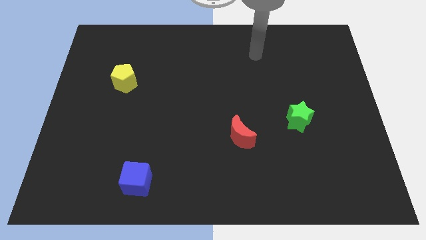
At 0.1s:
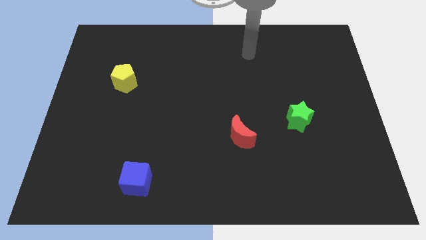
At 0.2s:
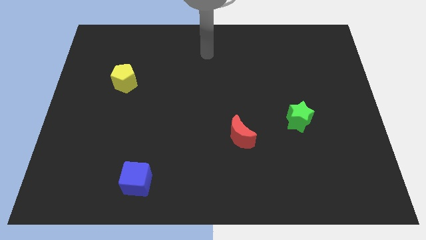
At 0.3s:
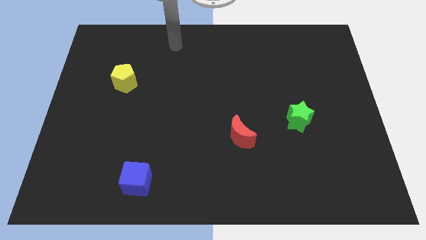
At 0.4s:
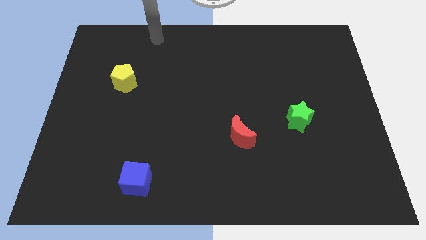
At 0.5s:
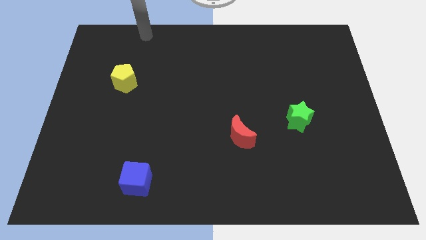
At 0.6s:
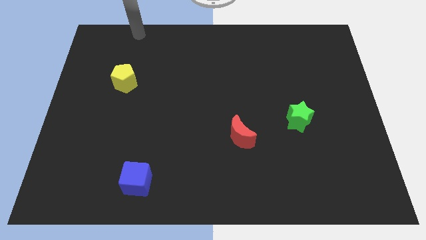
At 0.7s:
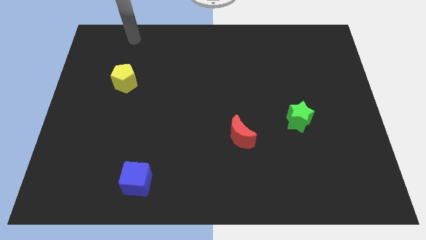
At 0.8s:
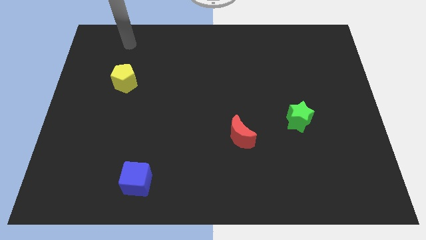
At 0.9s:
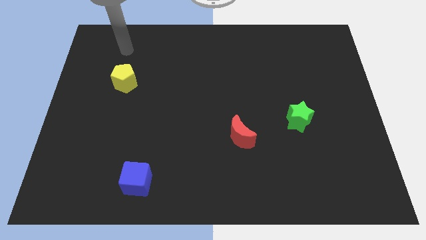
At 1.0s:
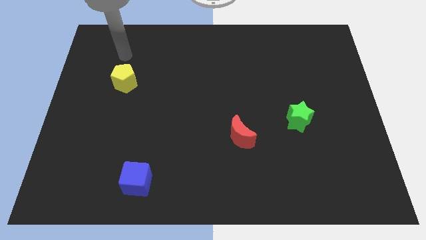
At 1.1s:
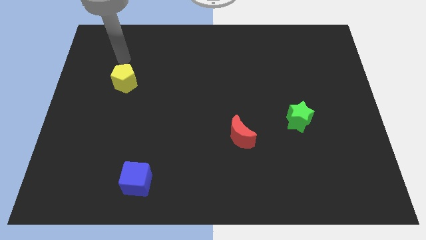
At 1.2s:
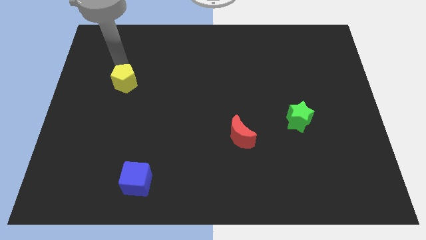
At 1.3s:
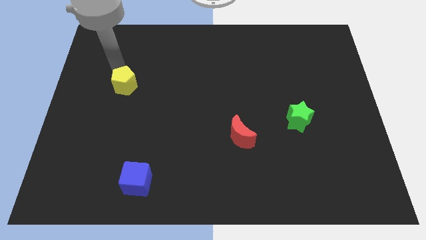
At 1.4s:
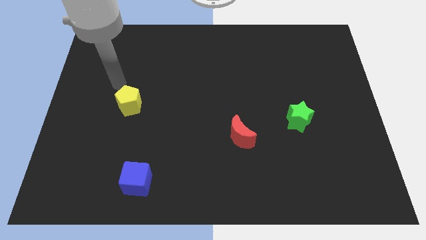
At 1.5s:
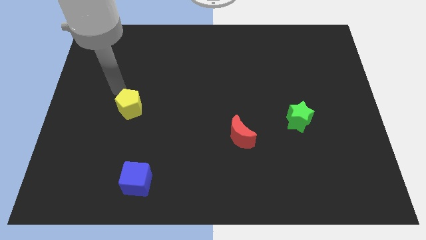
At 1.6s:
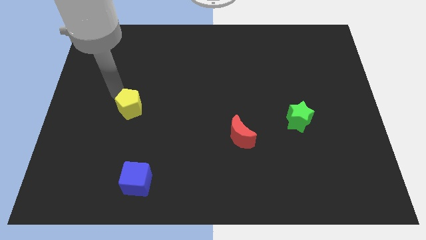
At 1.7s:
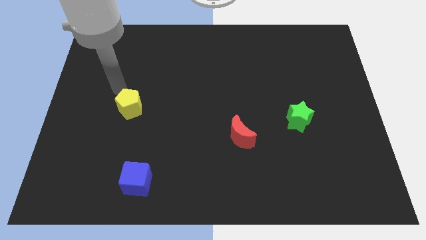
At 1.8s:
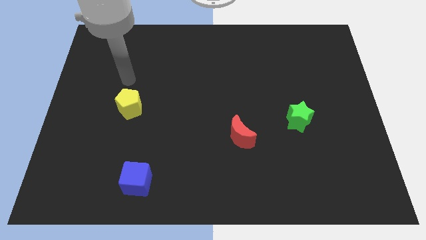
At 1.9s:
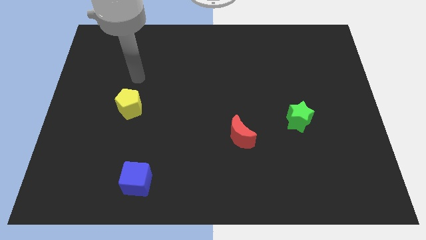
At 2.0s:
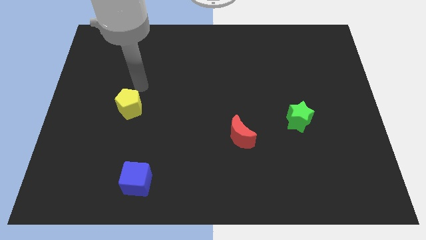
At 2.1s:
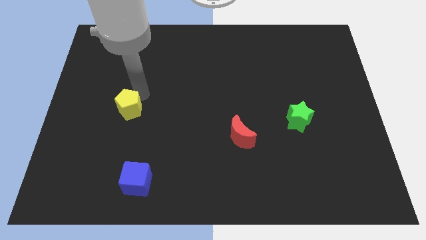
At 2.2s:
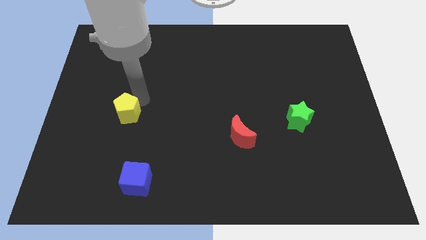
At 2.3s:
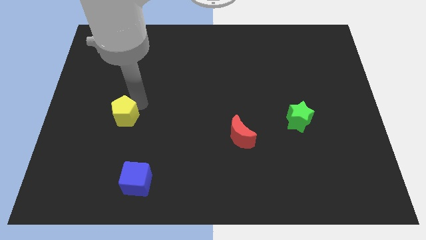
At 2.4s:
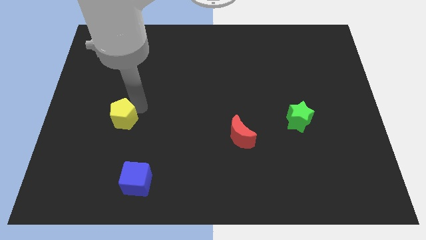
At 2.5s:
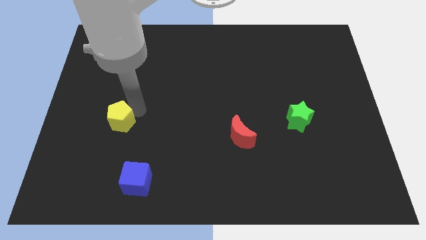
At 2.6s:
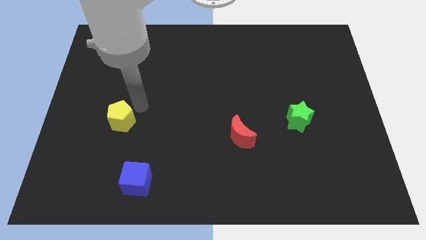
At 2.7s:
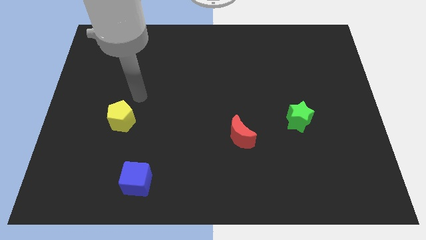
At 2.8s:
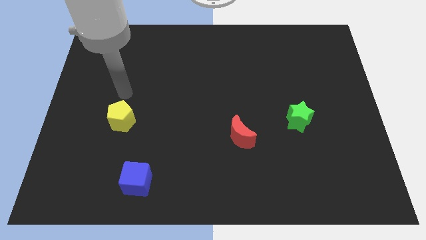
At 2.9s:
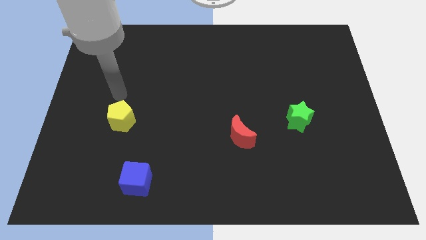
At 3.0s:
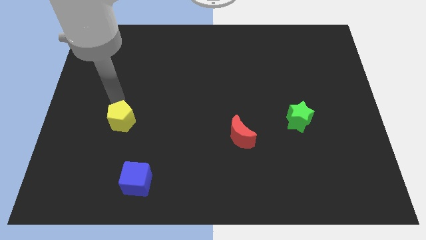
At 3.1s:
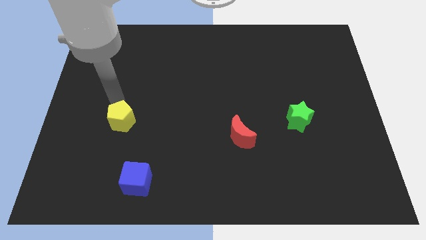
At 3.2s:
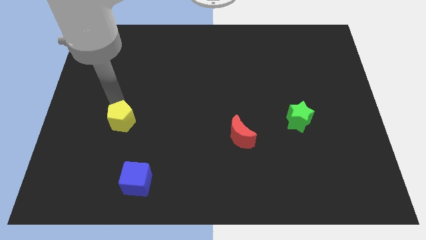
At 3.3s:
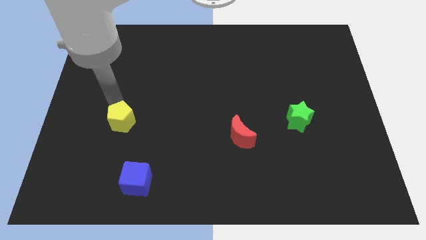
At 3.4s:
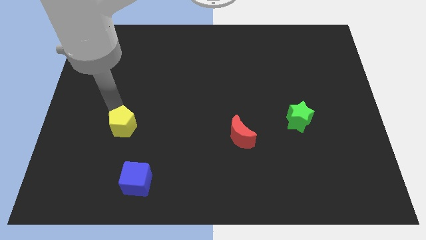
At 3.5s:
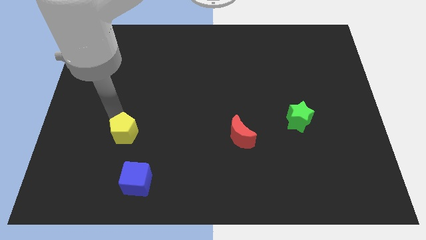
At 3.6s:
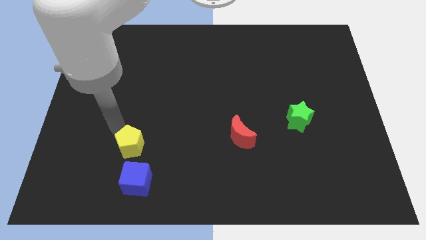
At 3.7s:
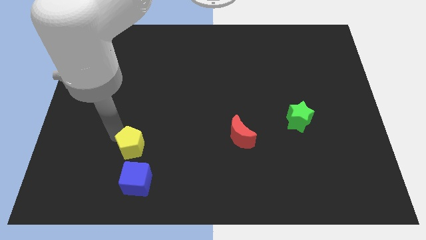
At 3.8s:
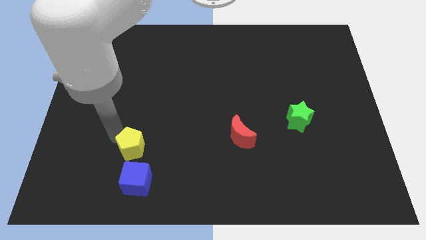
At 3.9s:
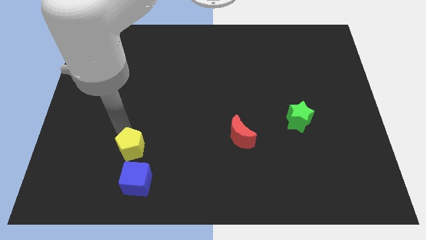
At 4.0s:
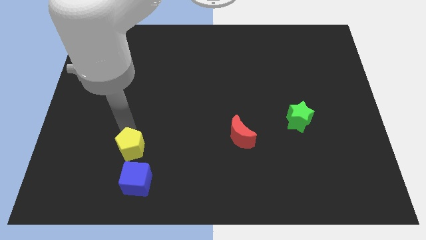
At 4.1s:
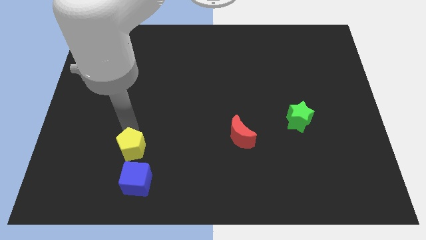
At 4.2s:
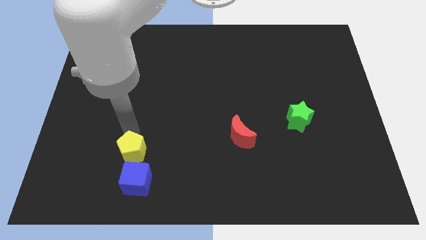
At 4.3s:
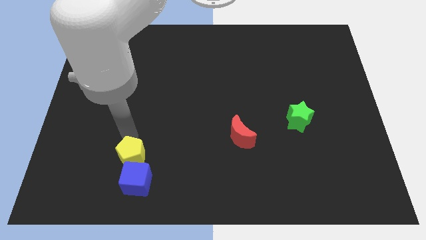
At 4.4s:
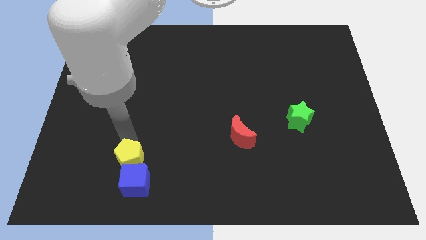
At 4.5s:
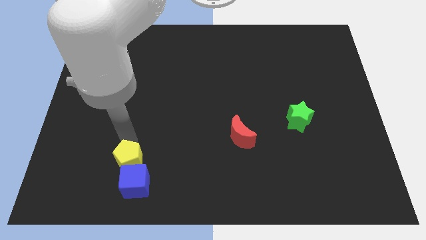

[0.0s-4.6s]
move the yellow pentagon towards the cube

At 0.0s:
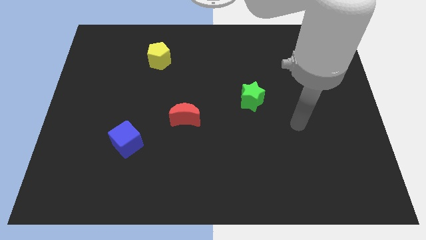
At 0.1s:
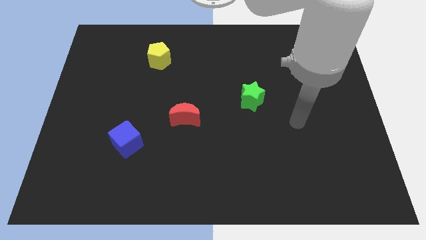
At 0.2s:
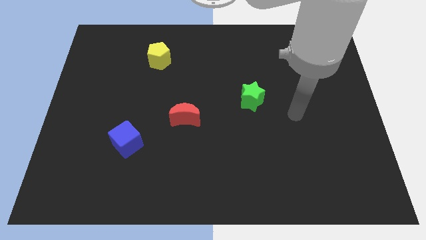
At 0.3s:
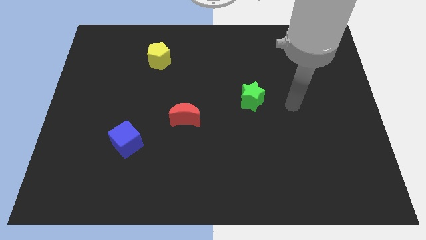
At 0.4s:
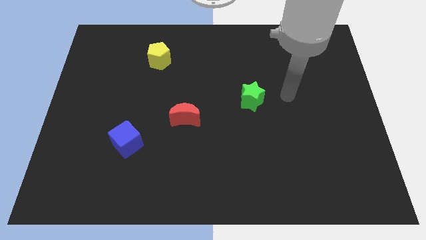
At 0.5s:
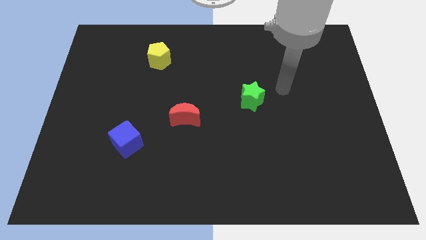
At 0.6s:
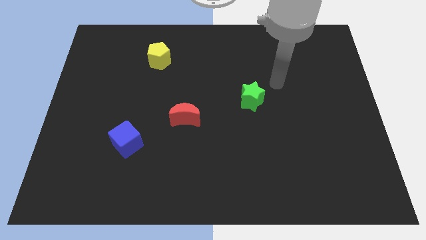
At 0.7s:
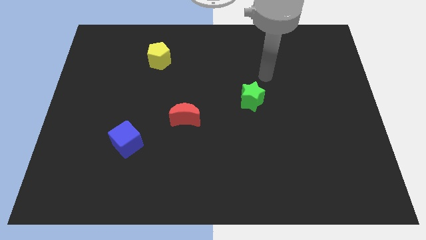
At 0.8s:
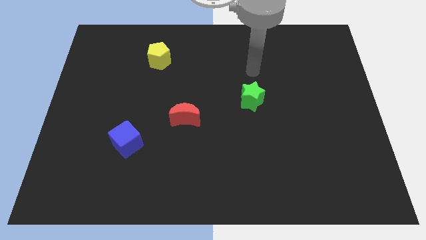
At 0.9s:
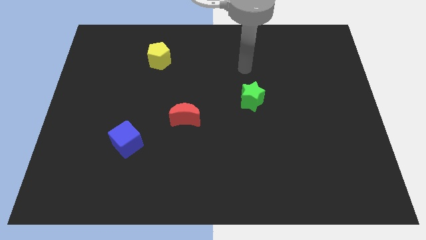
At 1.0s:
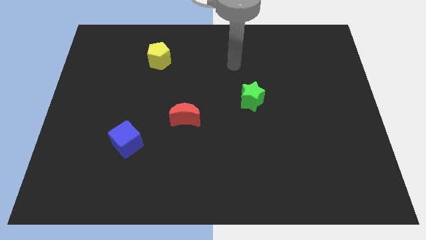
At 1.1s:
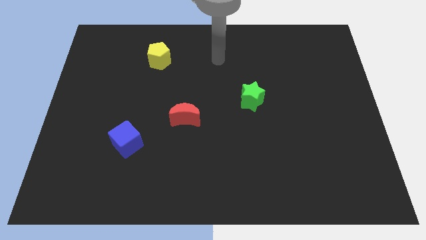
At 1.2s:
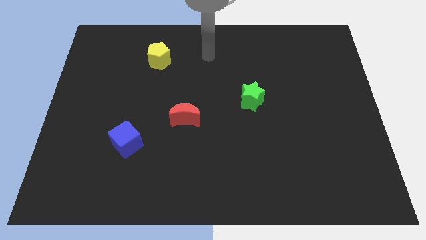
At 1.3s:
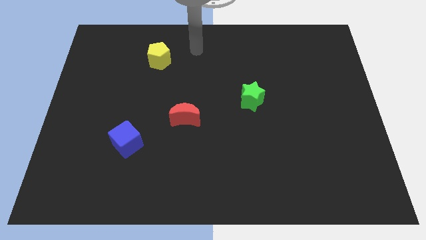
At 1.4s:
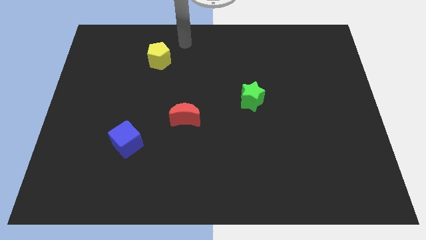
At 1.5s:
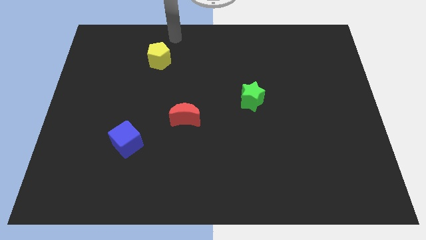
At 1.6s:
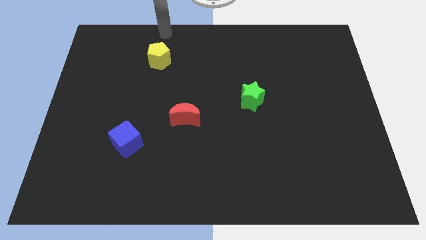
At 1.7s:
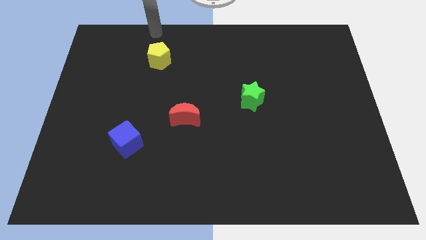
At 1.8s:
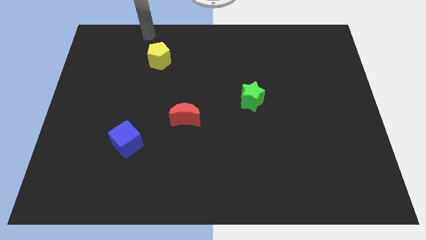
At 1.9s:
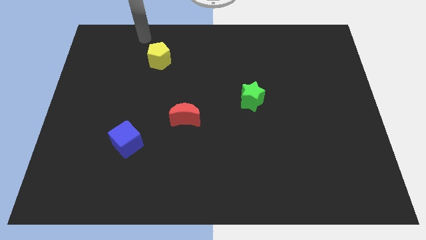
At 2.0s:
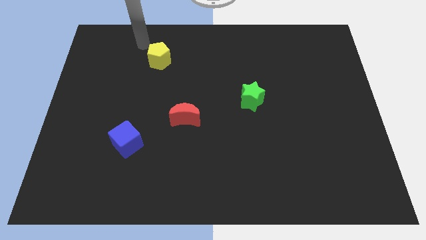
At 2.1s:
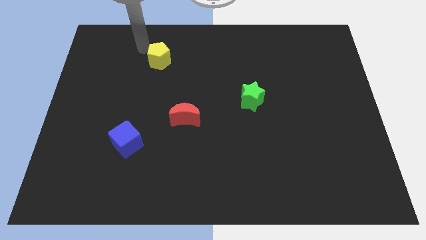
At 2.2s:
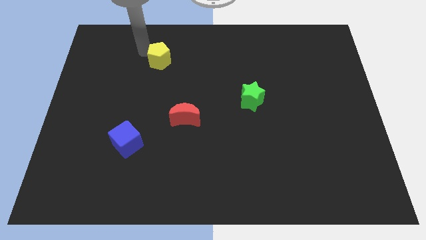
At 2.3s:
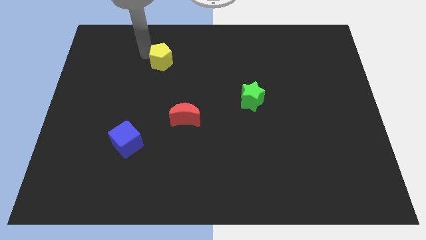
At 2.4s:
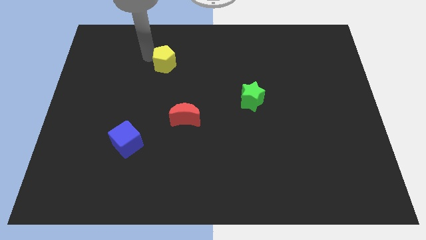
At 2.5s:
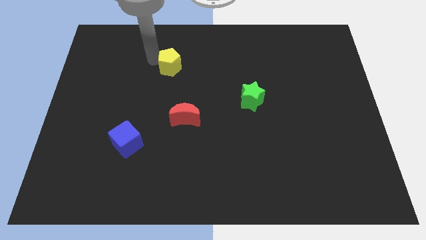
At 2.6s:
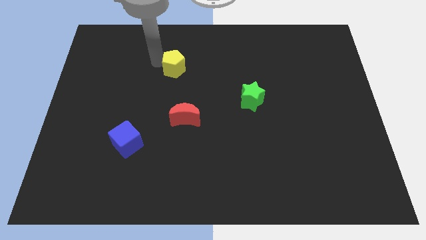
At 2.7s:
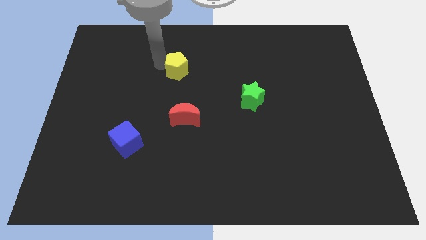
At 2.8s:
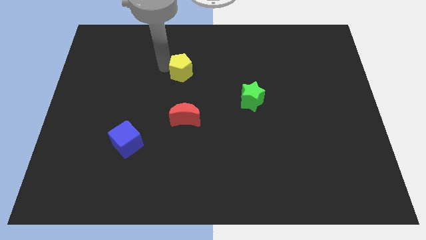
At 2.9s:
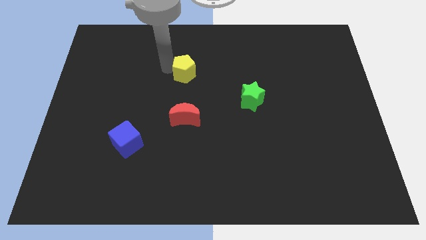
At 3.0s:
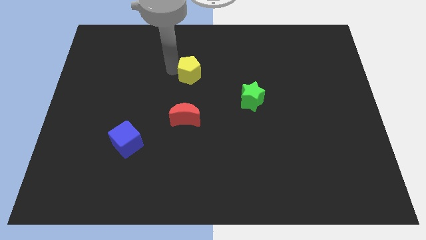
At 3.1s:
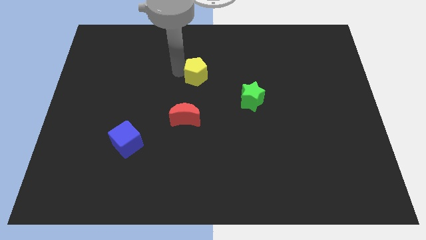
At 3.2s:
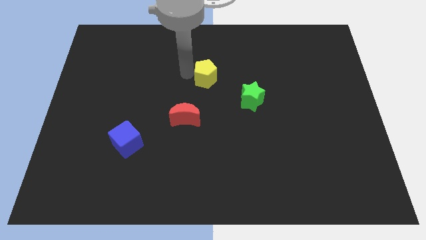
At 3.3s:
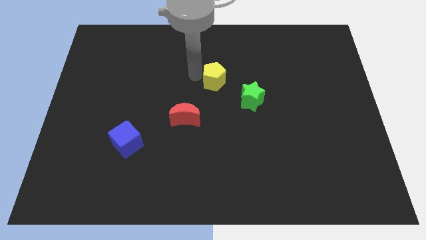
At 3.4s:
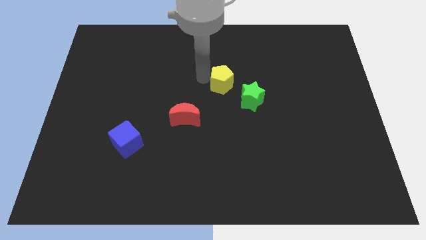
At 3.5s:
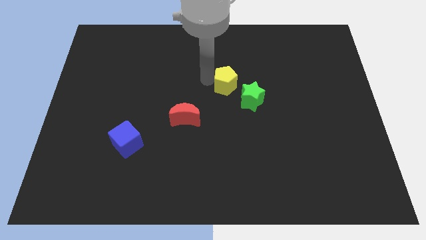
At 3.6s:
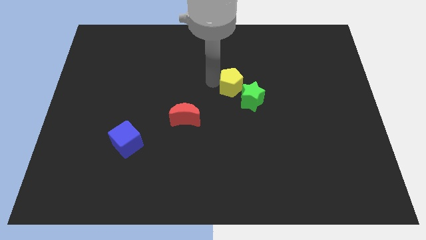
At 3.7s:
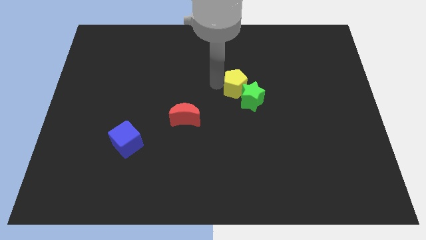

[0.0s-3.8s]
push the yellow pentagon towards the green block

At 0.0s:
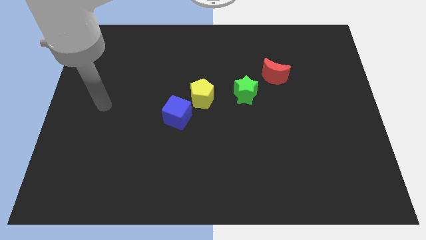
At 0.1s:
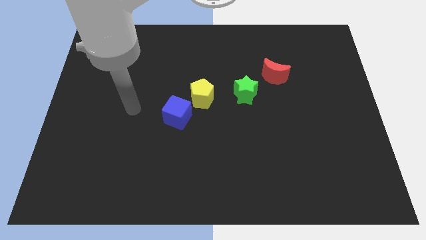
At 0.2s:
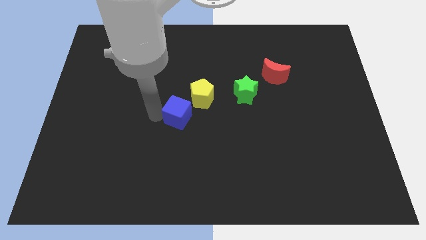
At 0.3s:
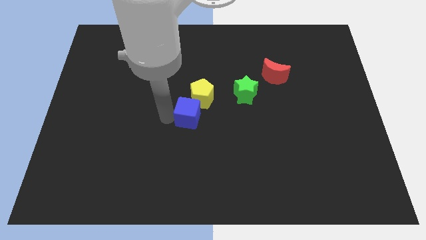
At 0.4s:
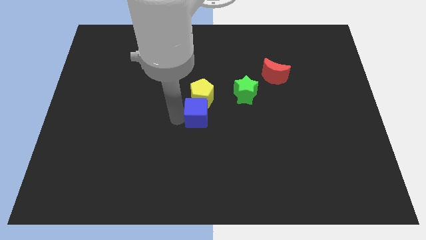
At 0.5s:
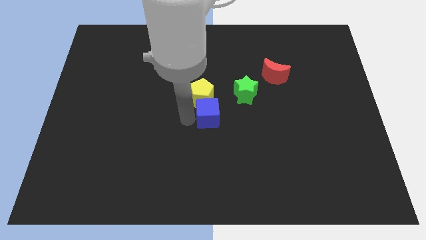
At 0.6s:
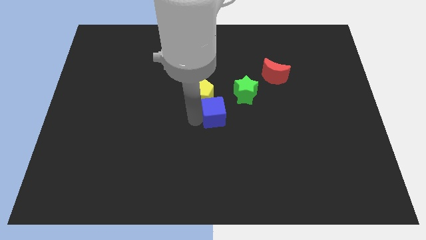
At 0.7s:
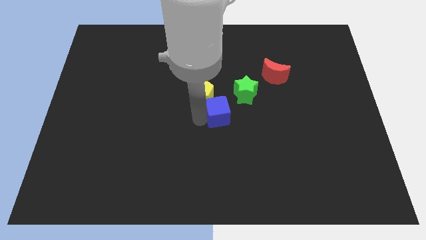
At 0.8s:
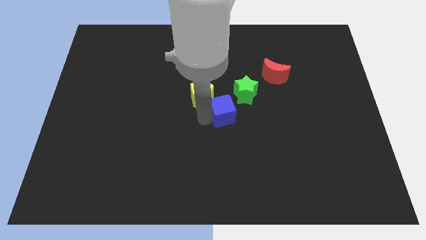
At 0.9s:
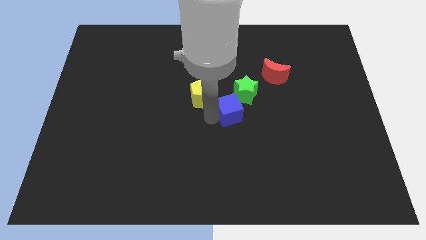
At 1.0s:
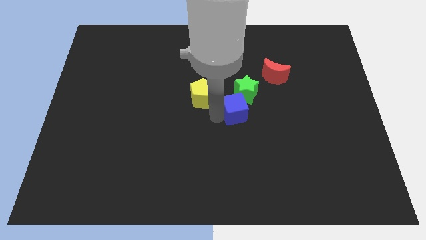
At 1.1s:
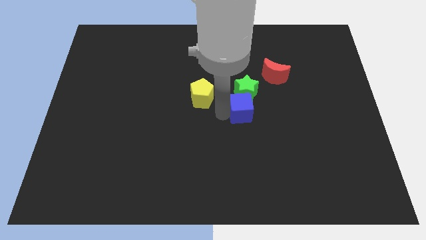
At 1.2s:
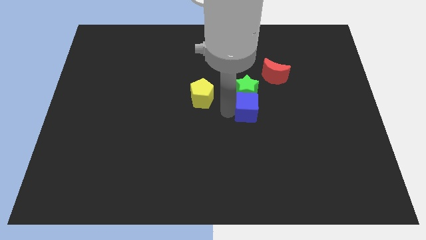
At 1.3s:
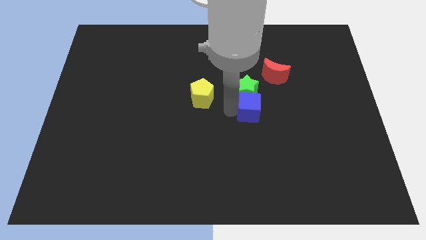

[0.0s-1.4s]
push the blue cube next to the star
